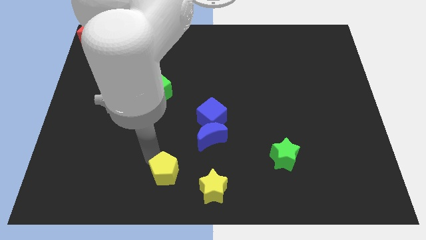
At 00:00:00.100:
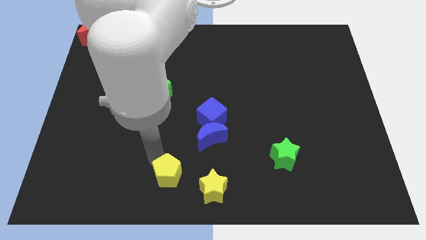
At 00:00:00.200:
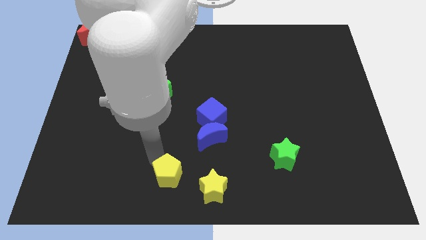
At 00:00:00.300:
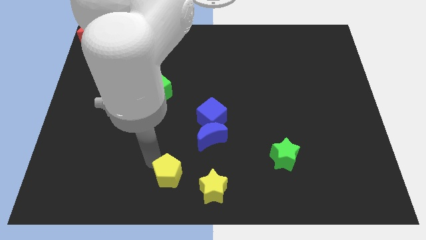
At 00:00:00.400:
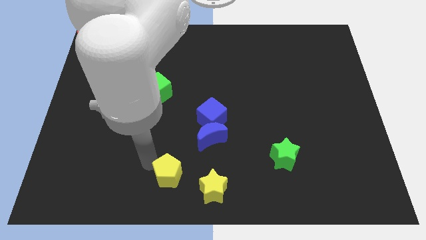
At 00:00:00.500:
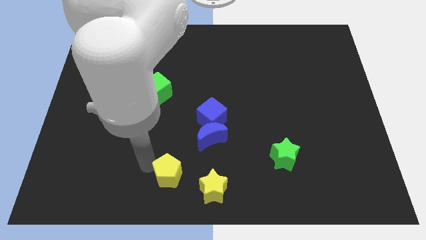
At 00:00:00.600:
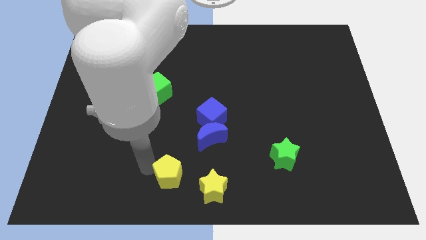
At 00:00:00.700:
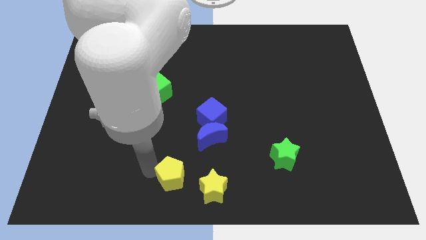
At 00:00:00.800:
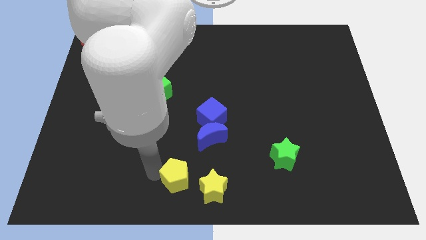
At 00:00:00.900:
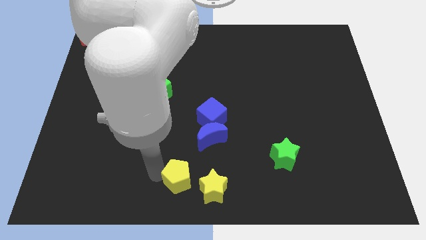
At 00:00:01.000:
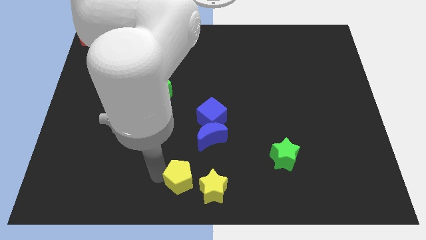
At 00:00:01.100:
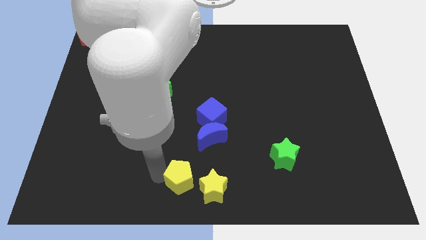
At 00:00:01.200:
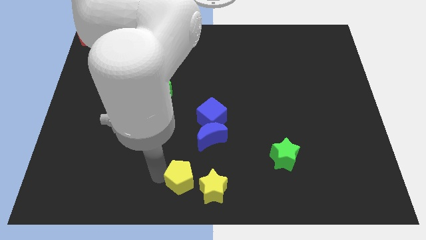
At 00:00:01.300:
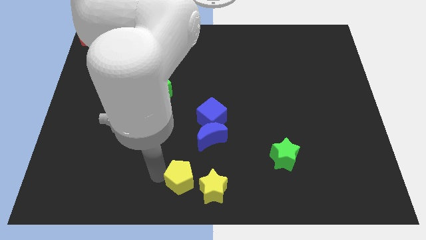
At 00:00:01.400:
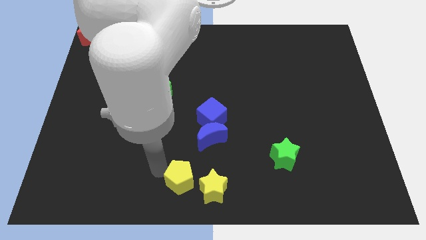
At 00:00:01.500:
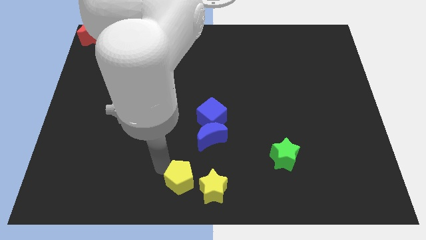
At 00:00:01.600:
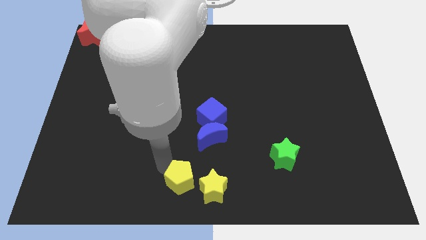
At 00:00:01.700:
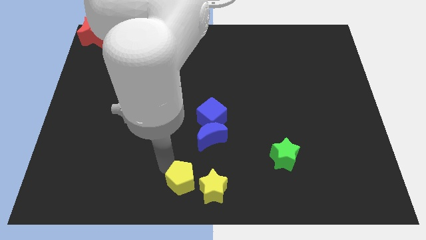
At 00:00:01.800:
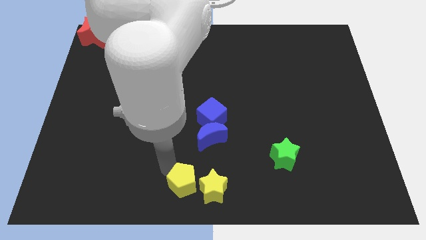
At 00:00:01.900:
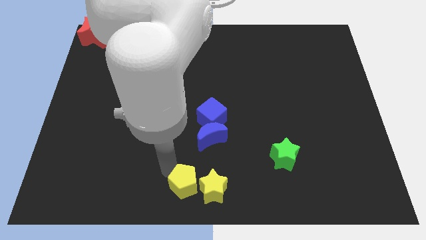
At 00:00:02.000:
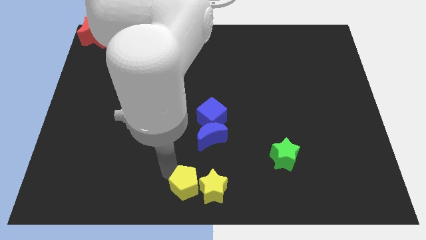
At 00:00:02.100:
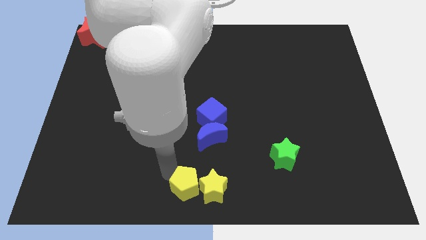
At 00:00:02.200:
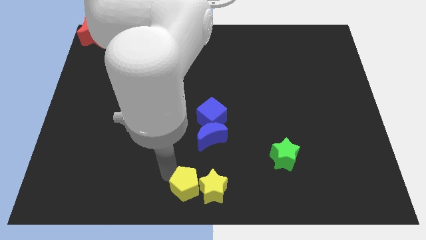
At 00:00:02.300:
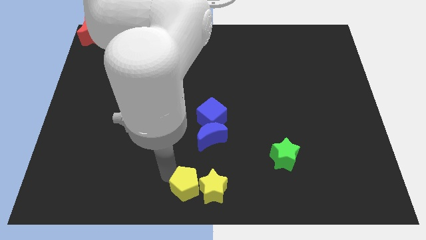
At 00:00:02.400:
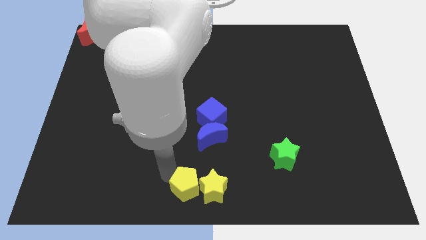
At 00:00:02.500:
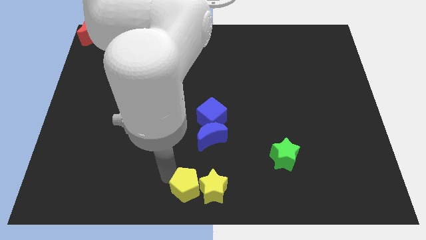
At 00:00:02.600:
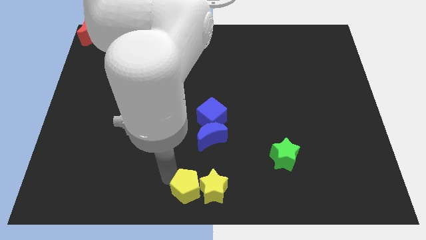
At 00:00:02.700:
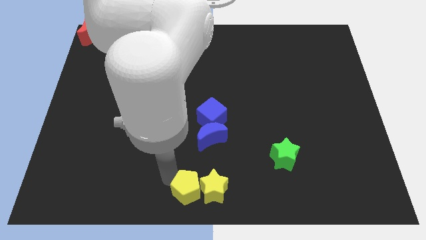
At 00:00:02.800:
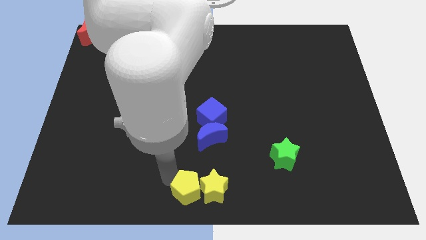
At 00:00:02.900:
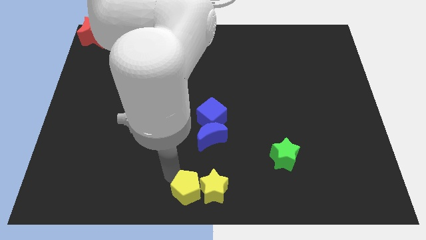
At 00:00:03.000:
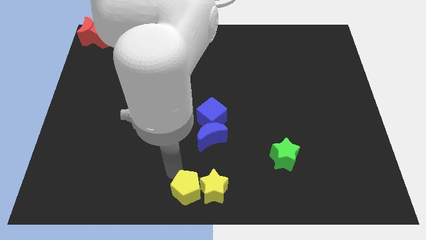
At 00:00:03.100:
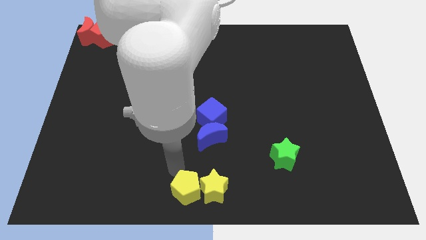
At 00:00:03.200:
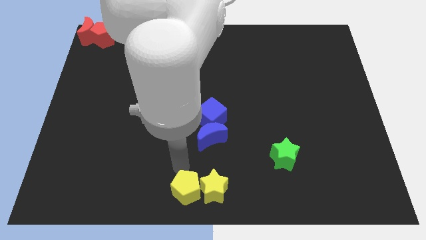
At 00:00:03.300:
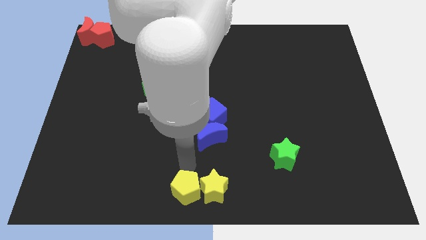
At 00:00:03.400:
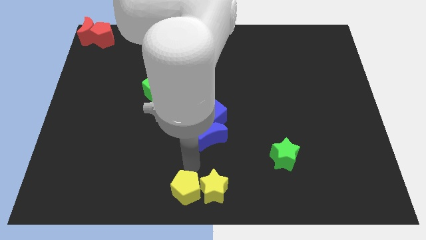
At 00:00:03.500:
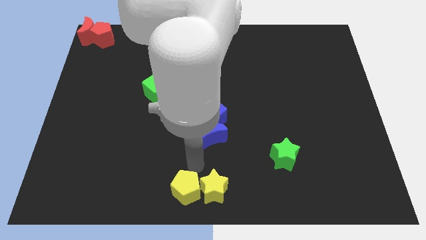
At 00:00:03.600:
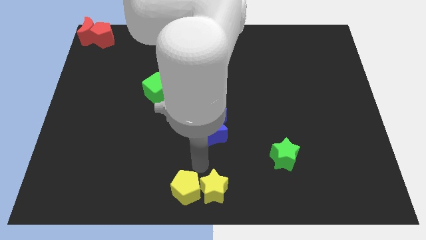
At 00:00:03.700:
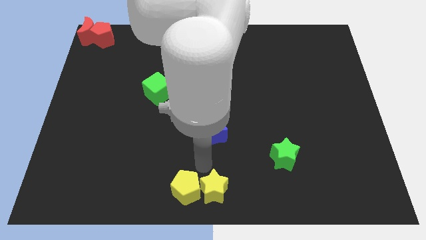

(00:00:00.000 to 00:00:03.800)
place yellow pentagon to the left of the yellow star

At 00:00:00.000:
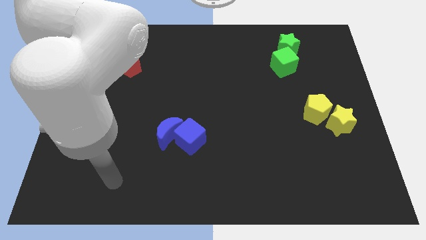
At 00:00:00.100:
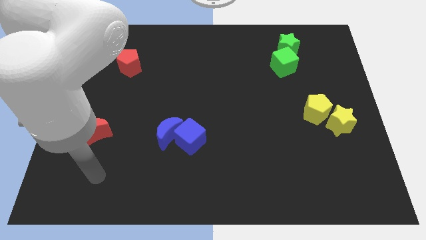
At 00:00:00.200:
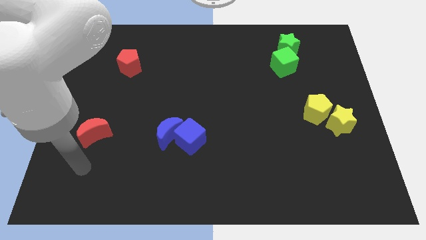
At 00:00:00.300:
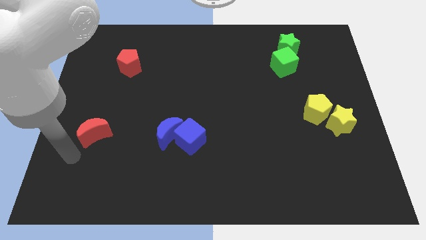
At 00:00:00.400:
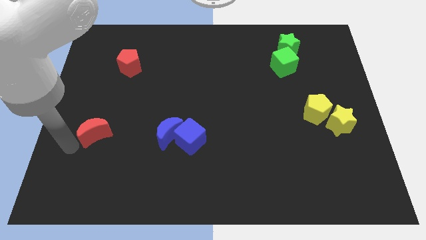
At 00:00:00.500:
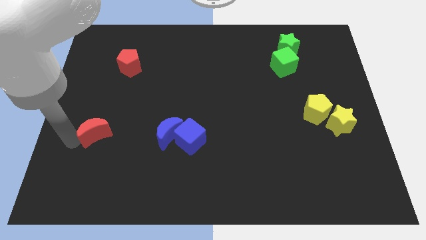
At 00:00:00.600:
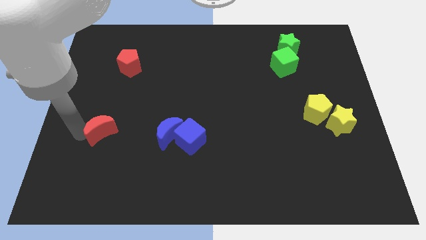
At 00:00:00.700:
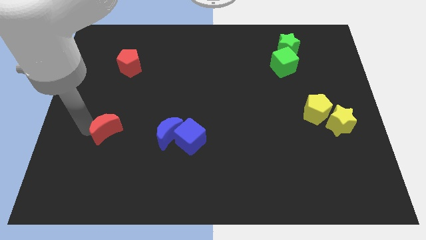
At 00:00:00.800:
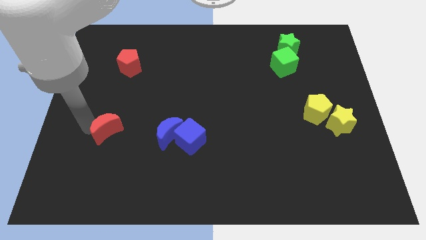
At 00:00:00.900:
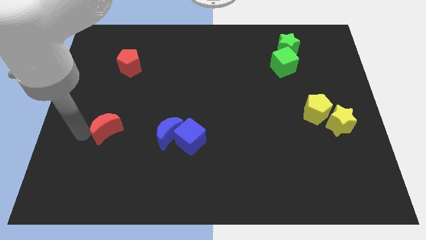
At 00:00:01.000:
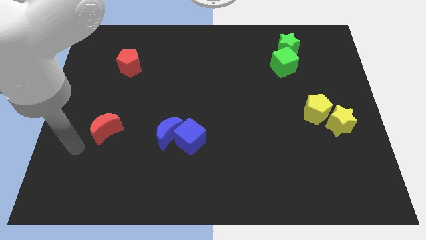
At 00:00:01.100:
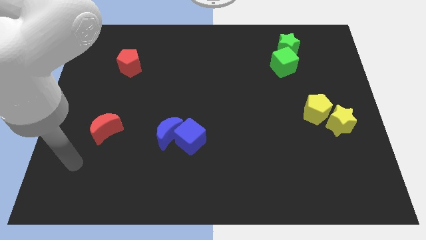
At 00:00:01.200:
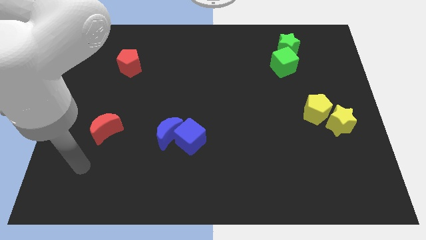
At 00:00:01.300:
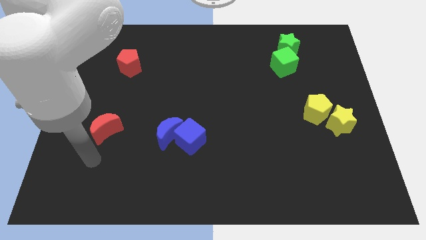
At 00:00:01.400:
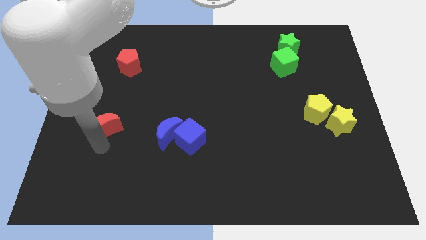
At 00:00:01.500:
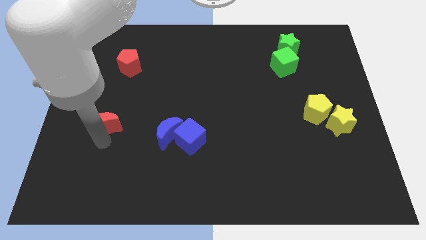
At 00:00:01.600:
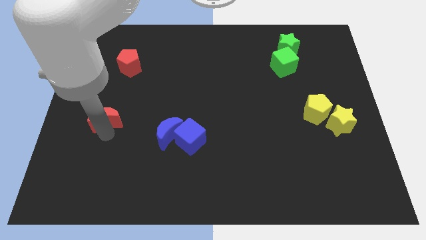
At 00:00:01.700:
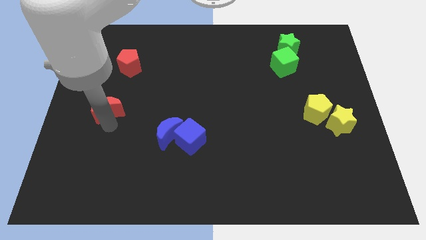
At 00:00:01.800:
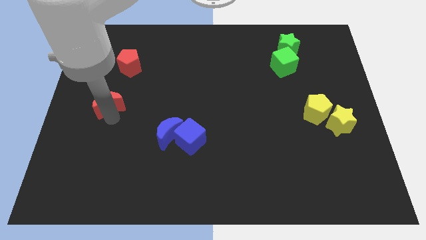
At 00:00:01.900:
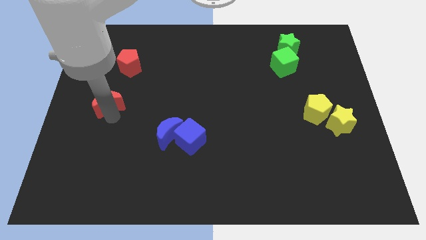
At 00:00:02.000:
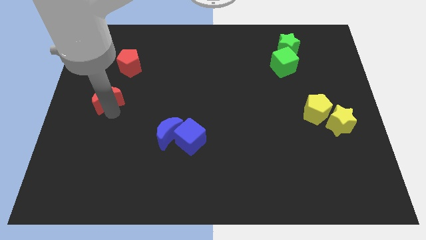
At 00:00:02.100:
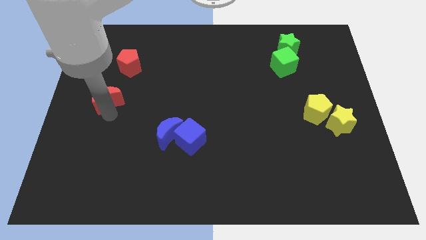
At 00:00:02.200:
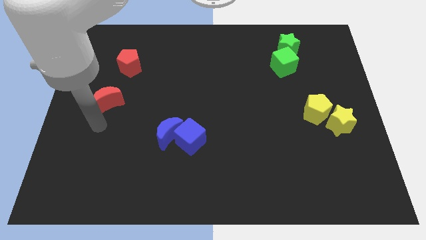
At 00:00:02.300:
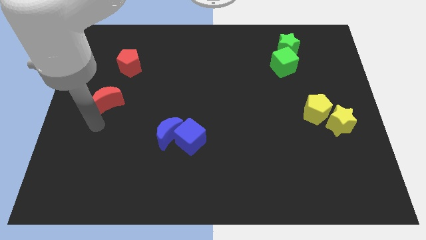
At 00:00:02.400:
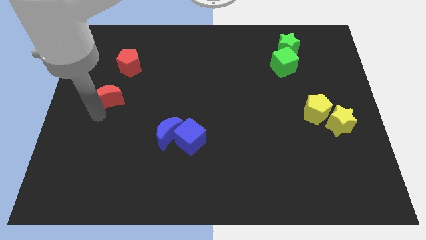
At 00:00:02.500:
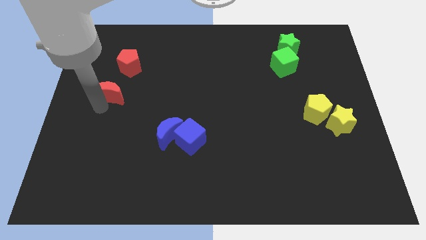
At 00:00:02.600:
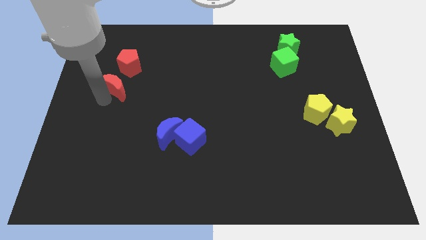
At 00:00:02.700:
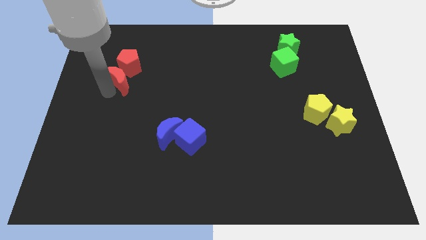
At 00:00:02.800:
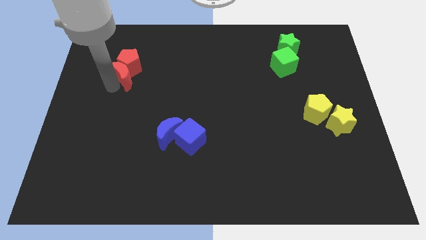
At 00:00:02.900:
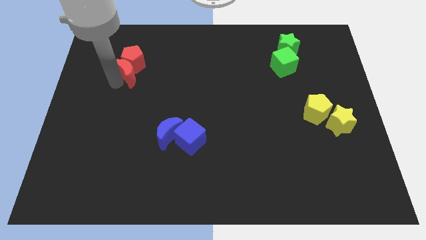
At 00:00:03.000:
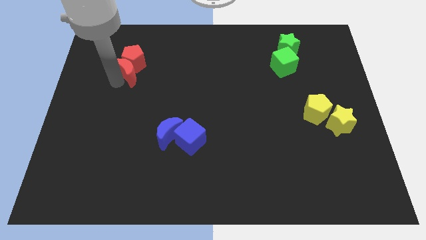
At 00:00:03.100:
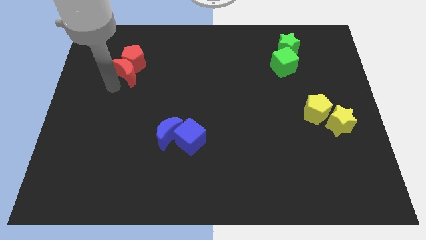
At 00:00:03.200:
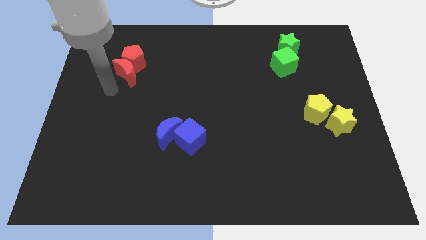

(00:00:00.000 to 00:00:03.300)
slide the red moon into the red pentagon

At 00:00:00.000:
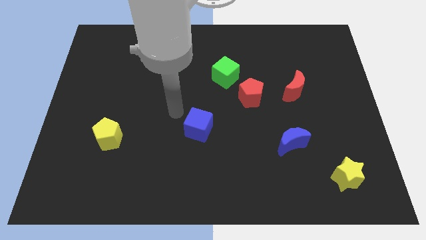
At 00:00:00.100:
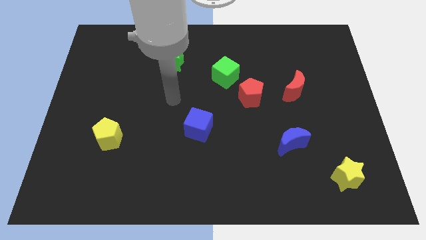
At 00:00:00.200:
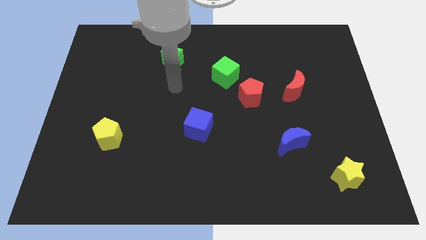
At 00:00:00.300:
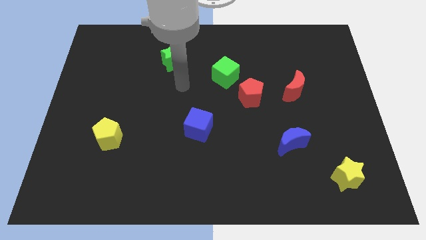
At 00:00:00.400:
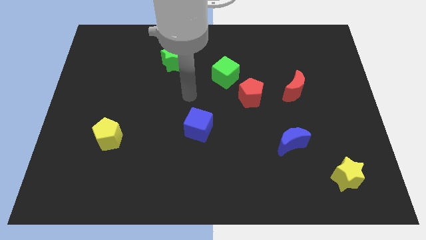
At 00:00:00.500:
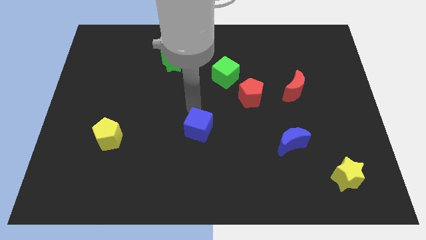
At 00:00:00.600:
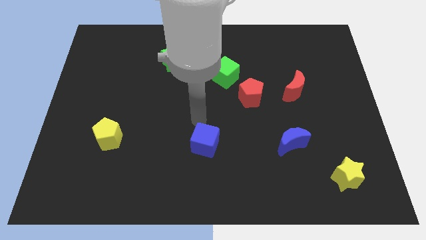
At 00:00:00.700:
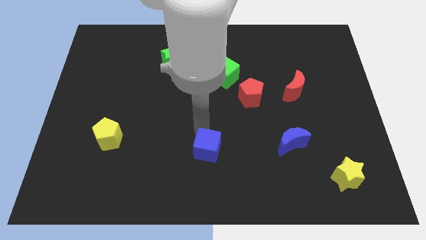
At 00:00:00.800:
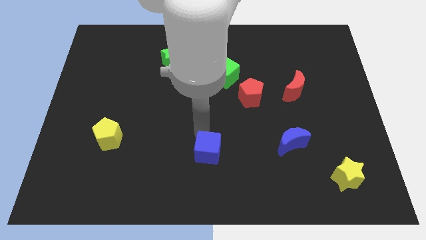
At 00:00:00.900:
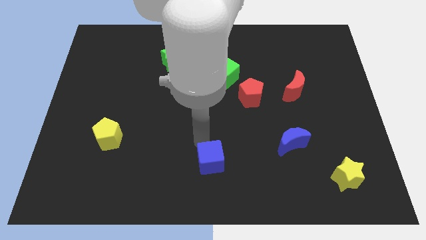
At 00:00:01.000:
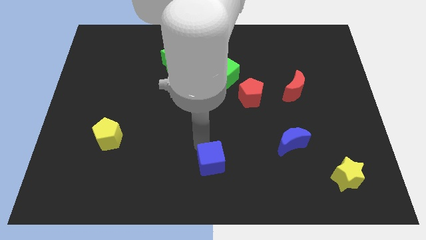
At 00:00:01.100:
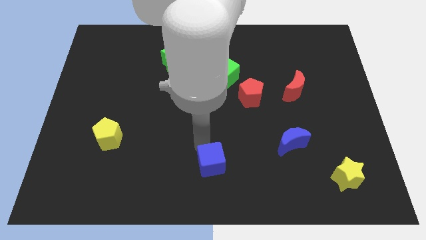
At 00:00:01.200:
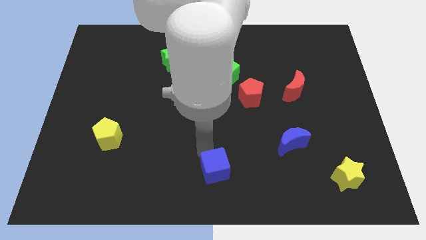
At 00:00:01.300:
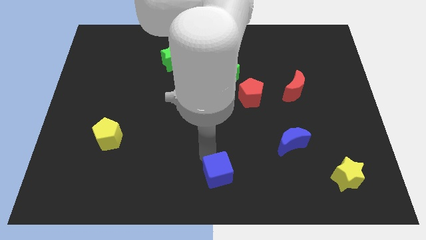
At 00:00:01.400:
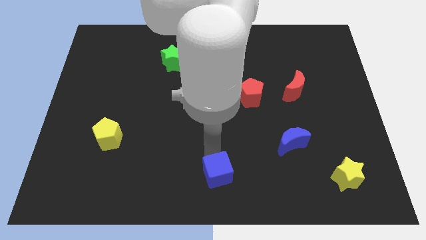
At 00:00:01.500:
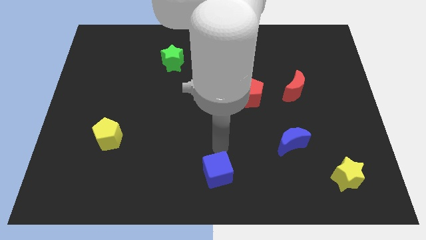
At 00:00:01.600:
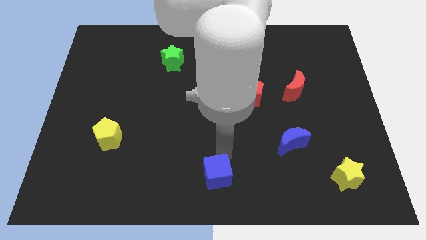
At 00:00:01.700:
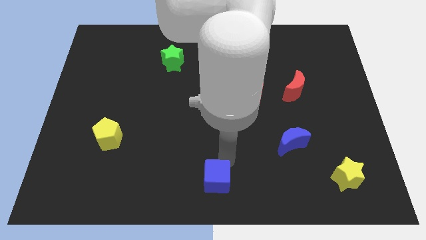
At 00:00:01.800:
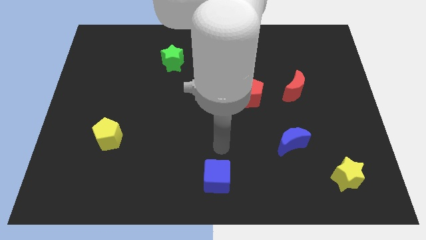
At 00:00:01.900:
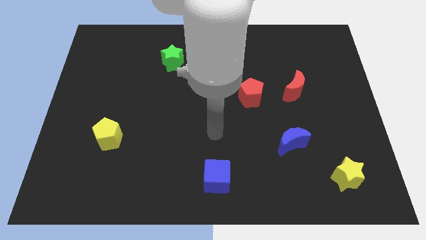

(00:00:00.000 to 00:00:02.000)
place blue cube at the bottom below the green cube
